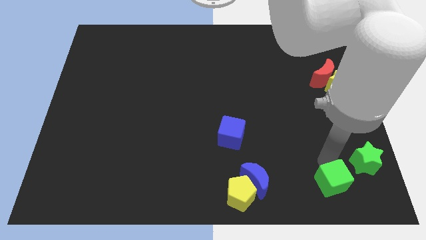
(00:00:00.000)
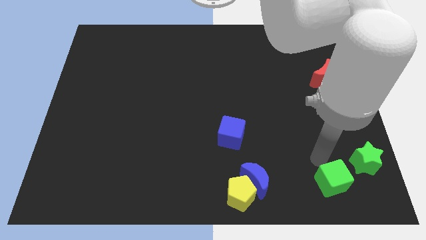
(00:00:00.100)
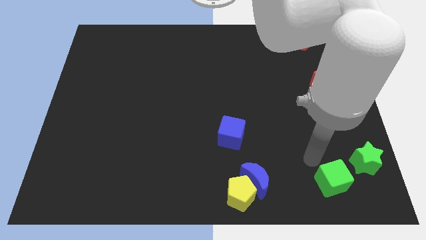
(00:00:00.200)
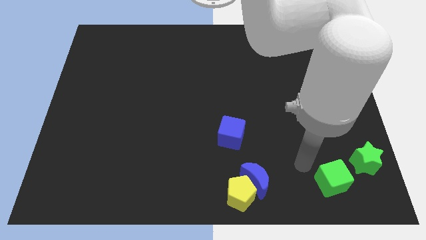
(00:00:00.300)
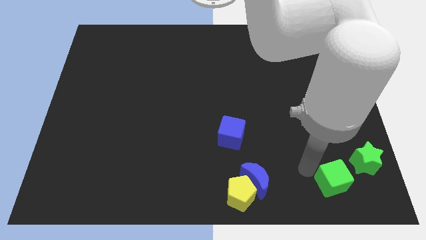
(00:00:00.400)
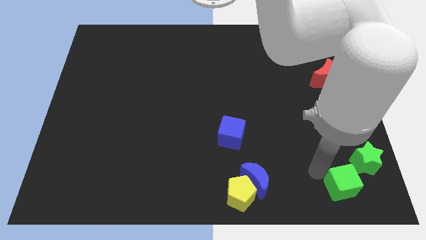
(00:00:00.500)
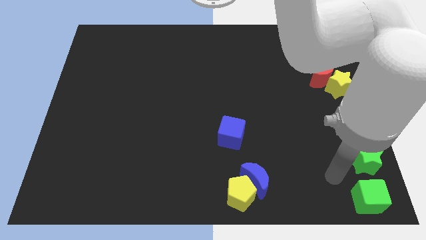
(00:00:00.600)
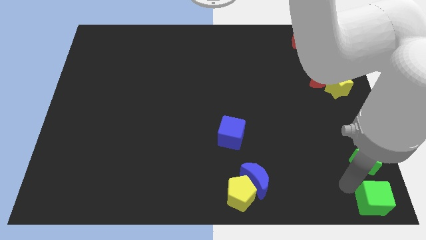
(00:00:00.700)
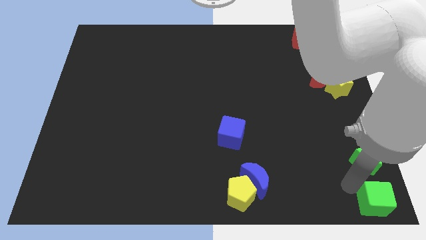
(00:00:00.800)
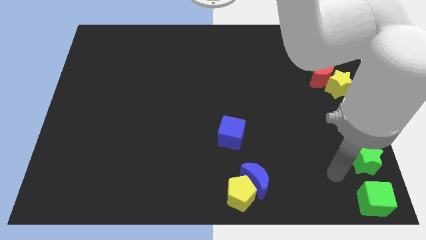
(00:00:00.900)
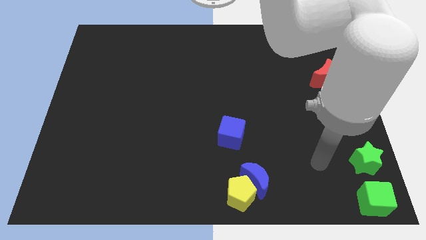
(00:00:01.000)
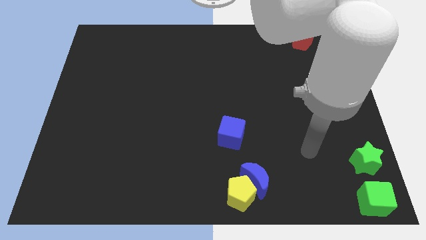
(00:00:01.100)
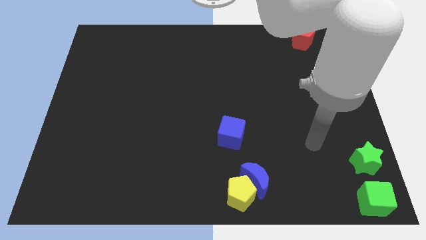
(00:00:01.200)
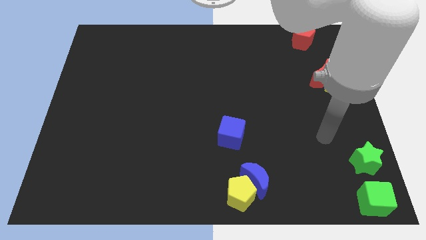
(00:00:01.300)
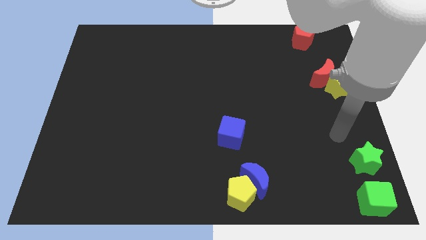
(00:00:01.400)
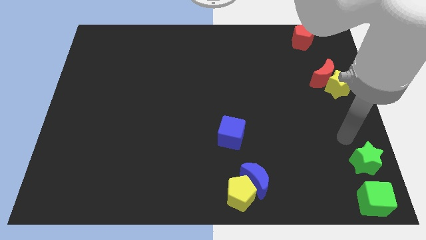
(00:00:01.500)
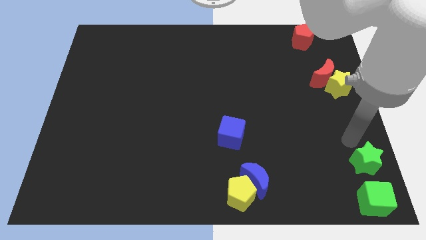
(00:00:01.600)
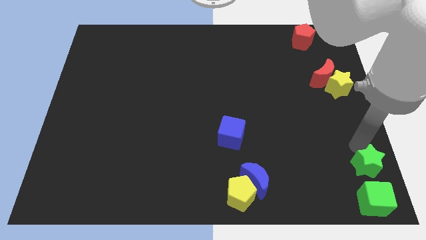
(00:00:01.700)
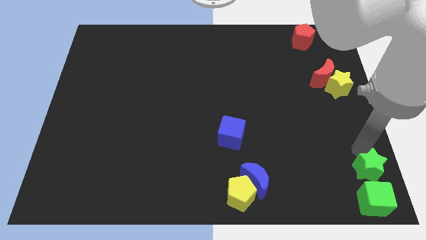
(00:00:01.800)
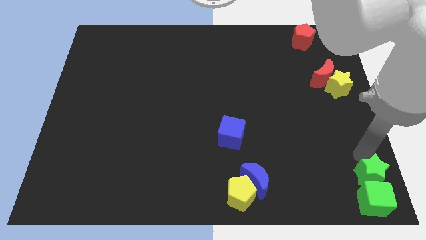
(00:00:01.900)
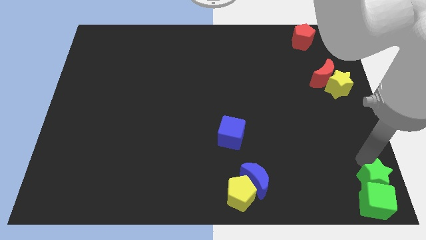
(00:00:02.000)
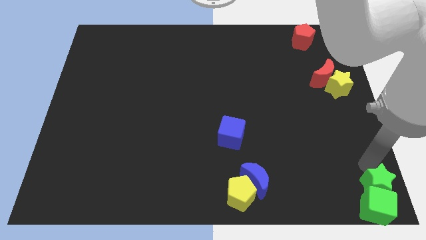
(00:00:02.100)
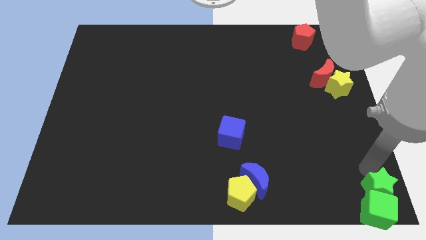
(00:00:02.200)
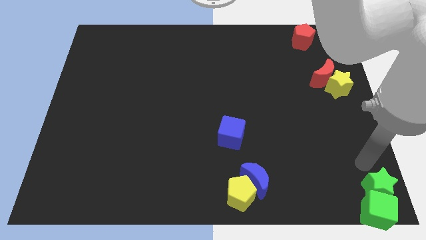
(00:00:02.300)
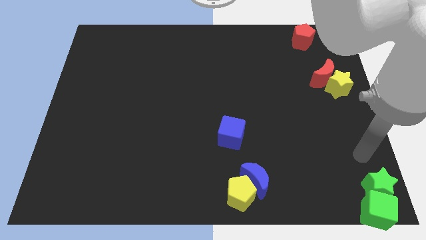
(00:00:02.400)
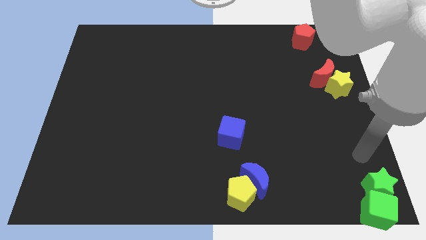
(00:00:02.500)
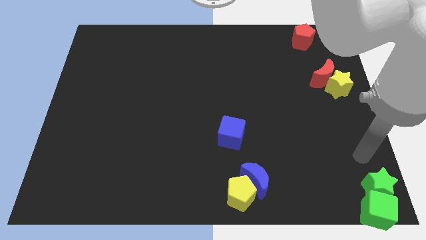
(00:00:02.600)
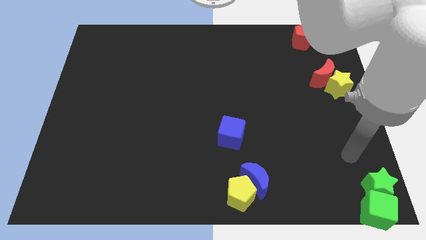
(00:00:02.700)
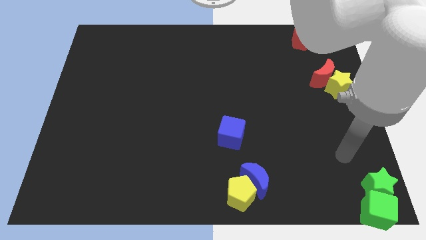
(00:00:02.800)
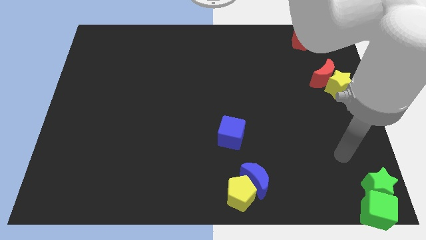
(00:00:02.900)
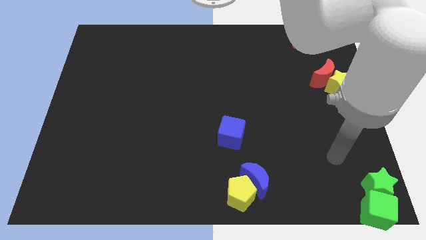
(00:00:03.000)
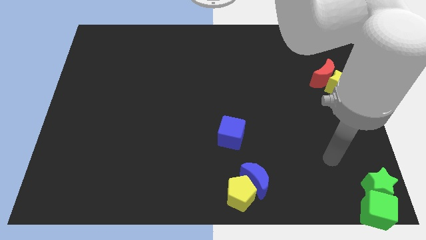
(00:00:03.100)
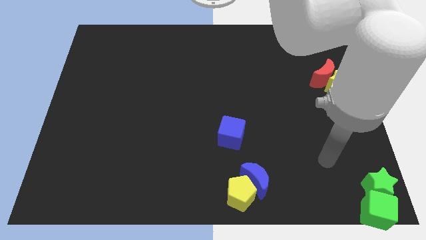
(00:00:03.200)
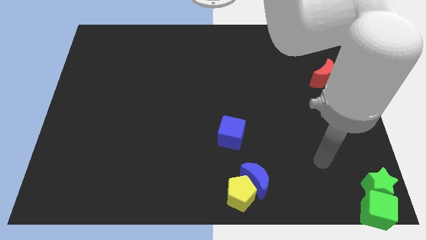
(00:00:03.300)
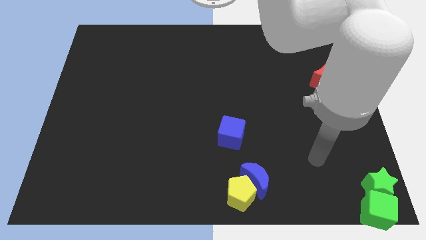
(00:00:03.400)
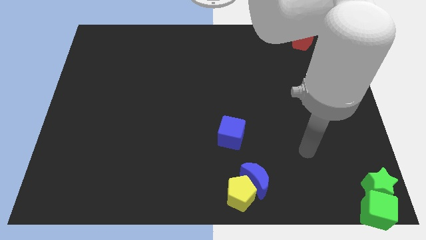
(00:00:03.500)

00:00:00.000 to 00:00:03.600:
move green star into green cube

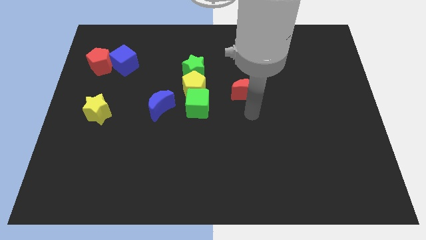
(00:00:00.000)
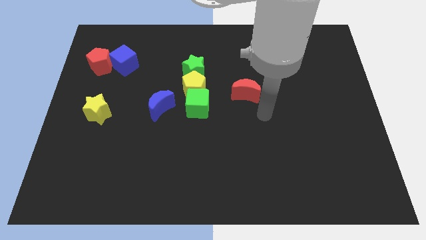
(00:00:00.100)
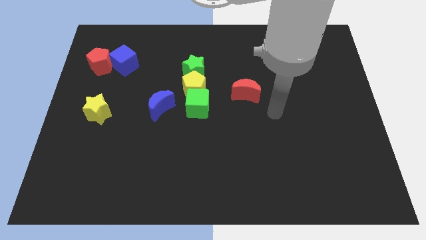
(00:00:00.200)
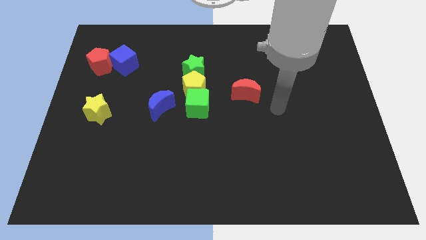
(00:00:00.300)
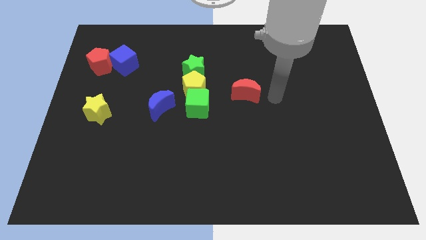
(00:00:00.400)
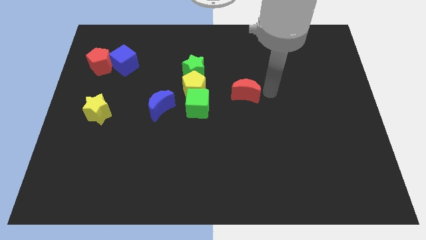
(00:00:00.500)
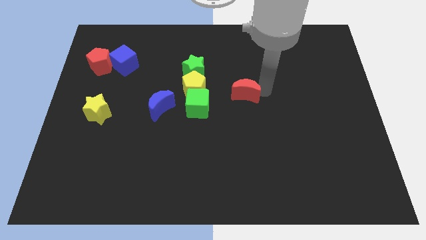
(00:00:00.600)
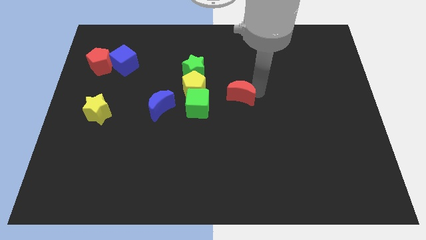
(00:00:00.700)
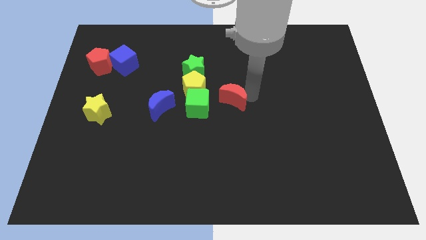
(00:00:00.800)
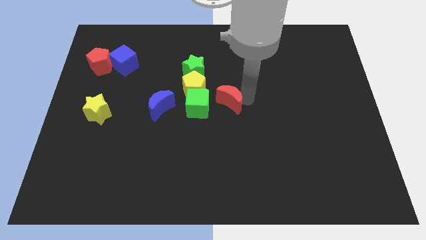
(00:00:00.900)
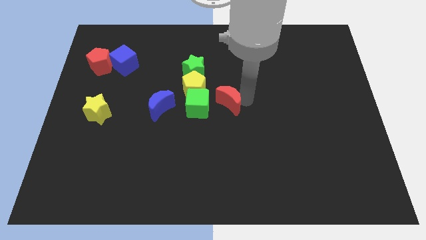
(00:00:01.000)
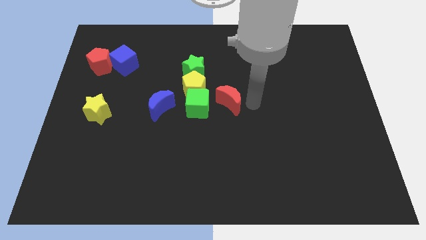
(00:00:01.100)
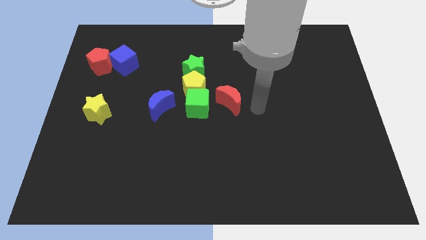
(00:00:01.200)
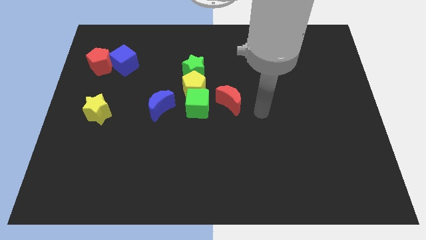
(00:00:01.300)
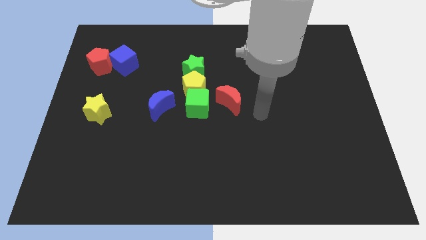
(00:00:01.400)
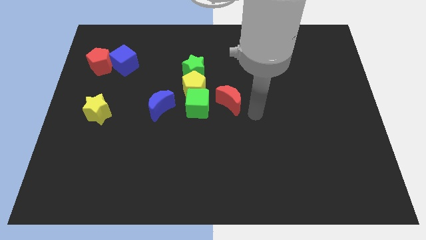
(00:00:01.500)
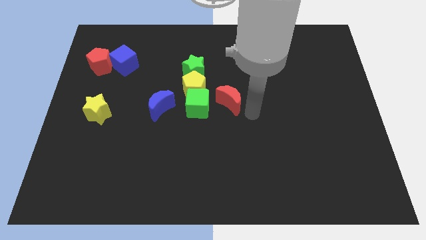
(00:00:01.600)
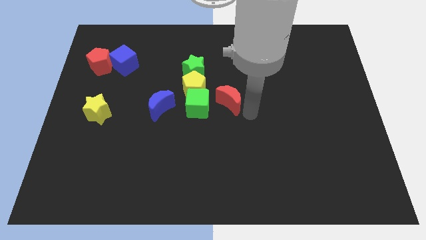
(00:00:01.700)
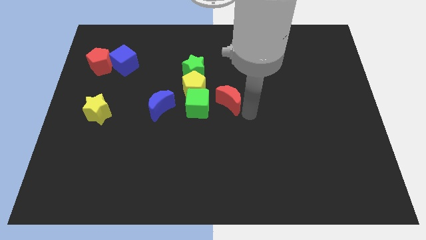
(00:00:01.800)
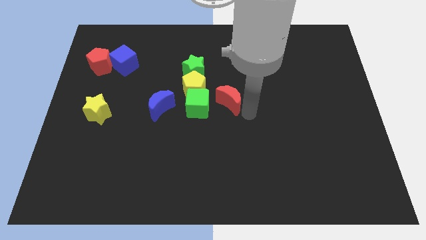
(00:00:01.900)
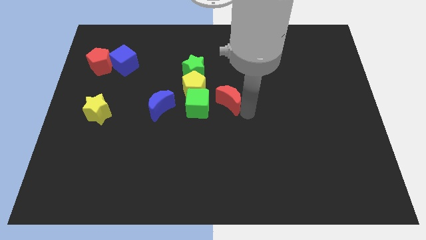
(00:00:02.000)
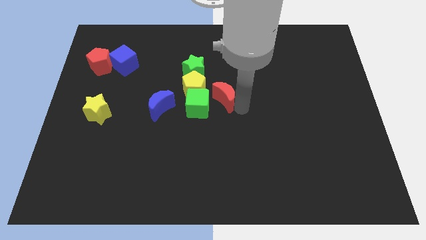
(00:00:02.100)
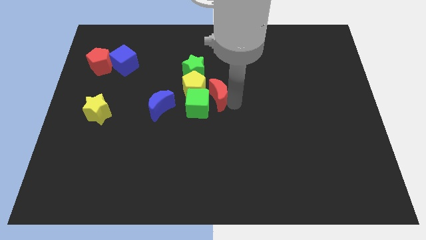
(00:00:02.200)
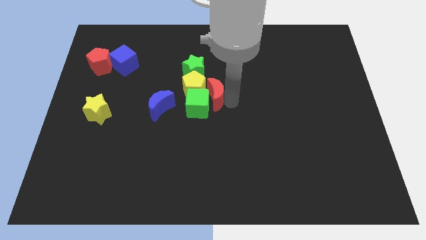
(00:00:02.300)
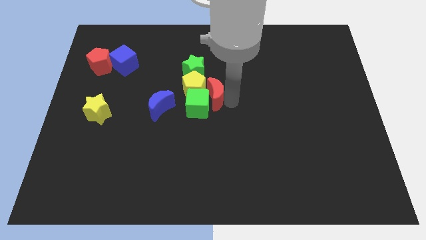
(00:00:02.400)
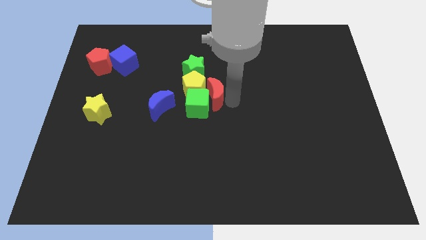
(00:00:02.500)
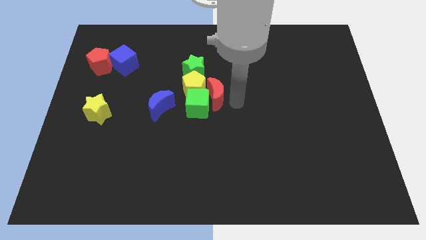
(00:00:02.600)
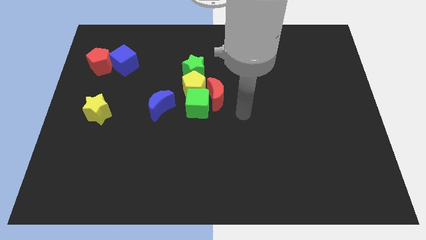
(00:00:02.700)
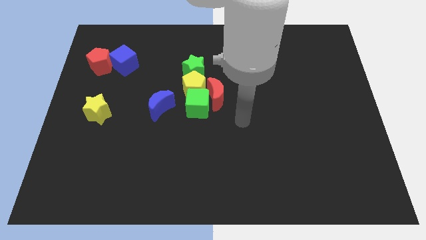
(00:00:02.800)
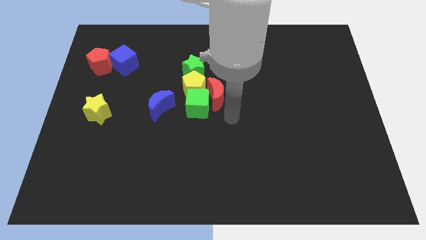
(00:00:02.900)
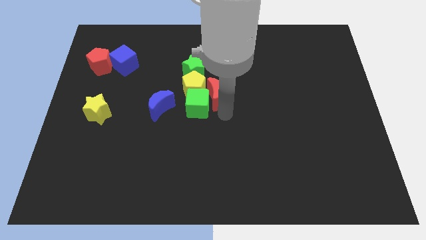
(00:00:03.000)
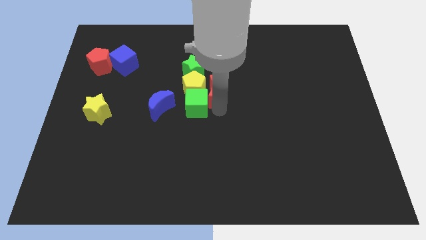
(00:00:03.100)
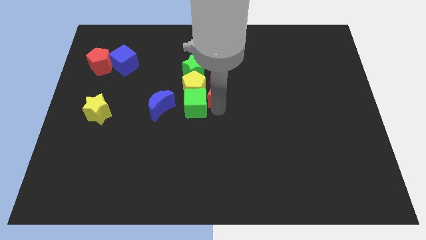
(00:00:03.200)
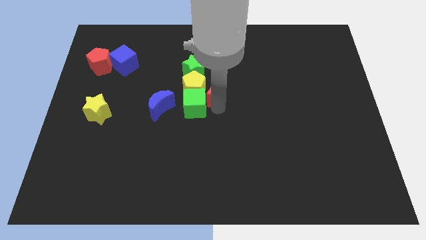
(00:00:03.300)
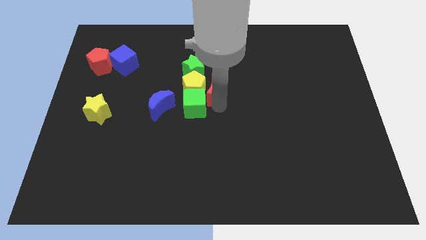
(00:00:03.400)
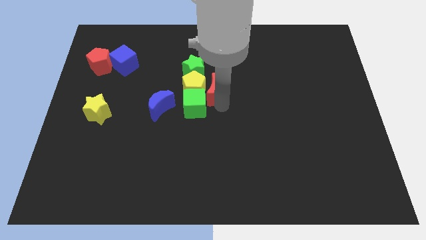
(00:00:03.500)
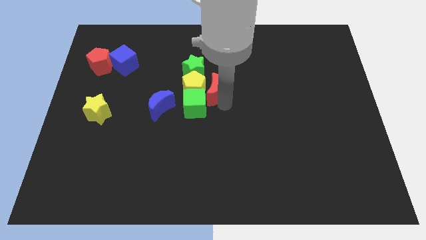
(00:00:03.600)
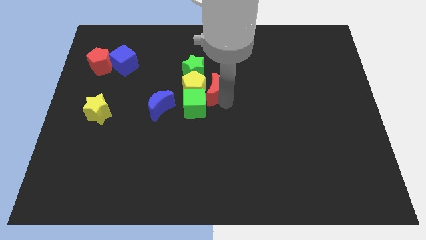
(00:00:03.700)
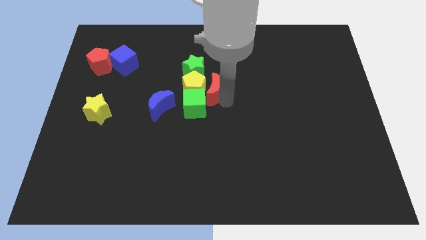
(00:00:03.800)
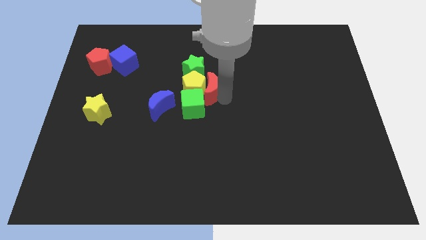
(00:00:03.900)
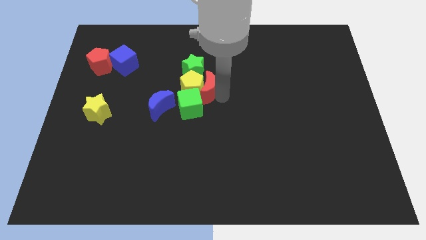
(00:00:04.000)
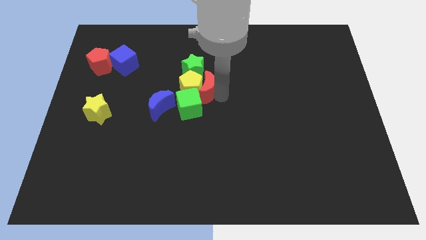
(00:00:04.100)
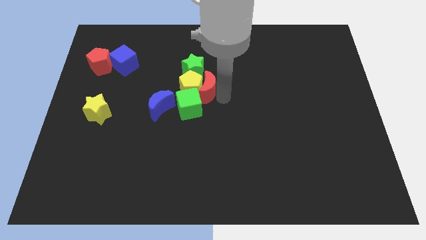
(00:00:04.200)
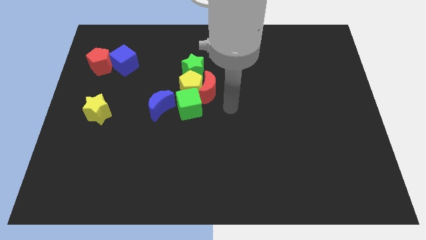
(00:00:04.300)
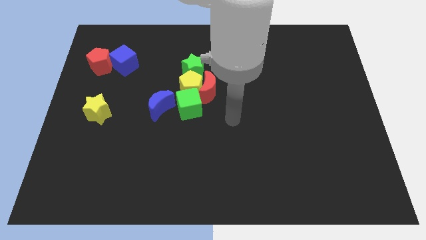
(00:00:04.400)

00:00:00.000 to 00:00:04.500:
push the red crescent into the group of blocks

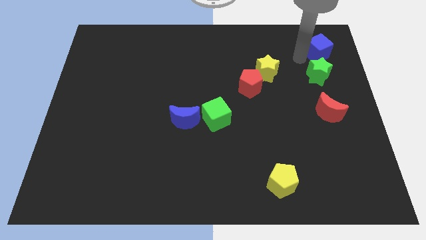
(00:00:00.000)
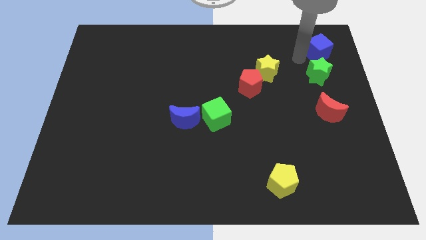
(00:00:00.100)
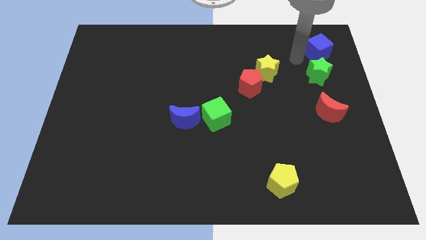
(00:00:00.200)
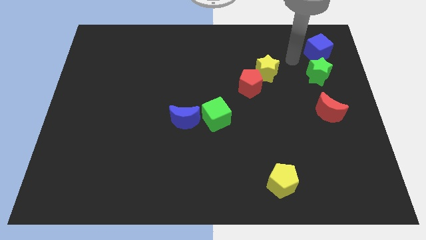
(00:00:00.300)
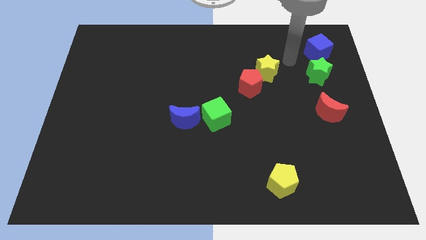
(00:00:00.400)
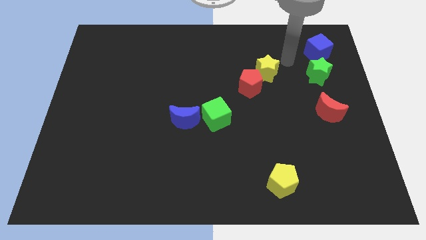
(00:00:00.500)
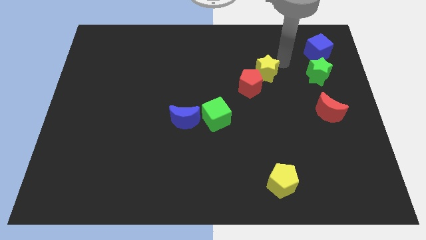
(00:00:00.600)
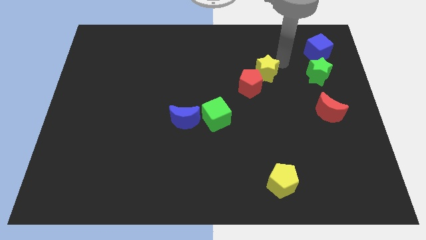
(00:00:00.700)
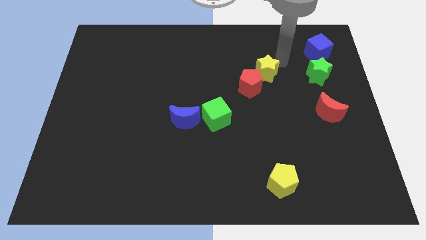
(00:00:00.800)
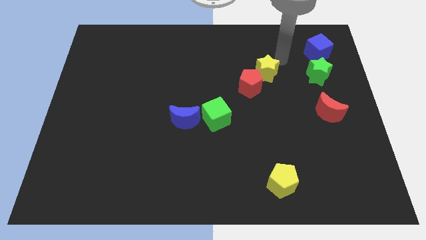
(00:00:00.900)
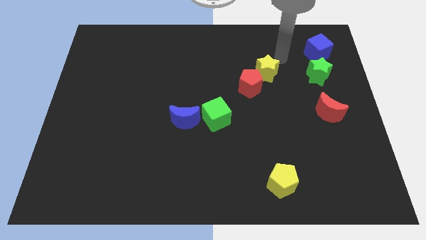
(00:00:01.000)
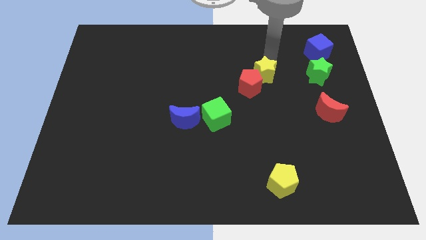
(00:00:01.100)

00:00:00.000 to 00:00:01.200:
move arm near yellow star
